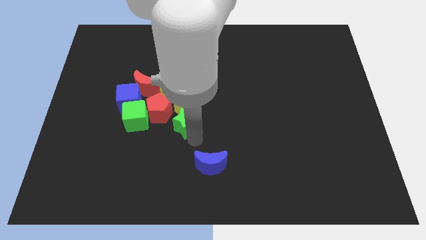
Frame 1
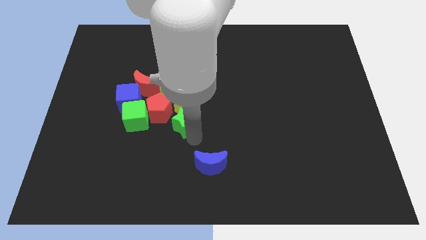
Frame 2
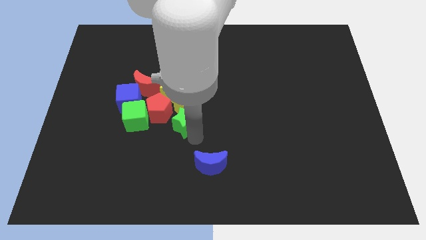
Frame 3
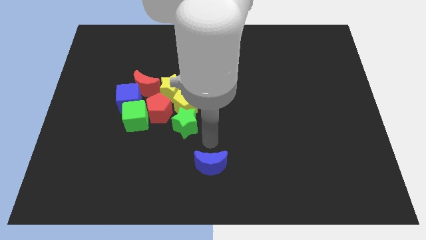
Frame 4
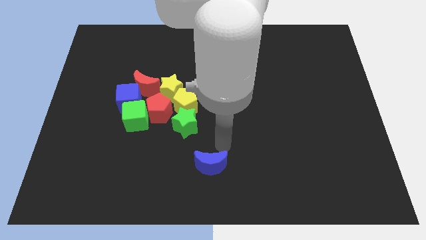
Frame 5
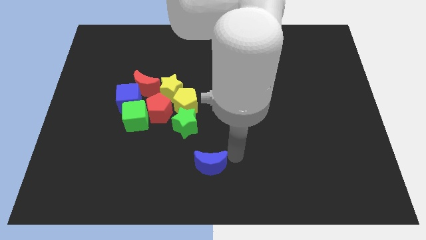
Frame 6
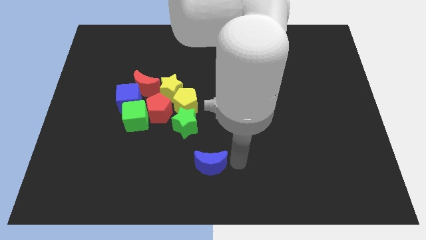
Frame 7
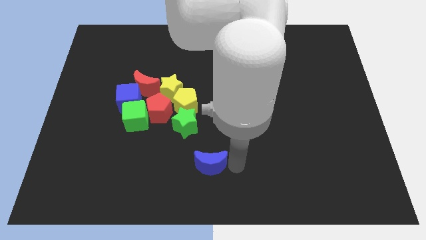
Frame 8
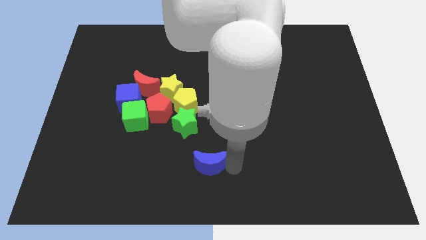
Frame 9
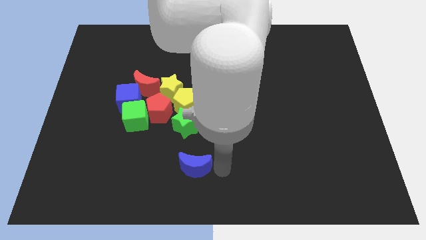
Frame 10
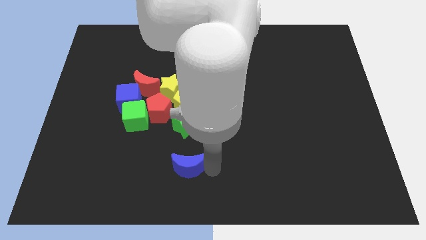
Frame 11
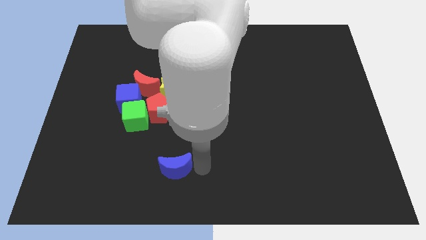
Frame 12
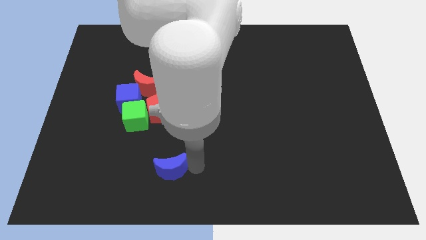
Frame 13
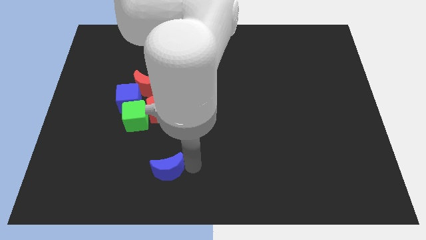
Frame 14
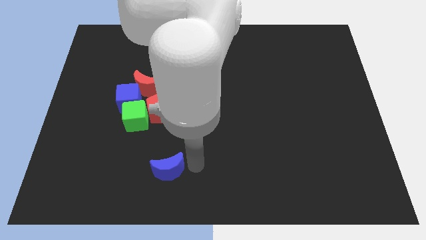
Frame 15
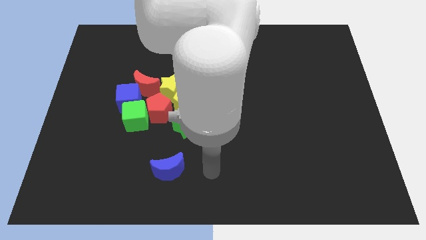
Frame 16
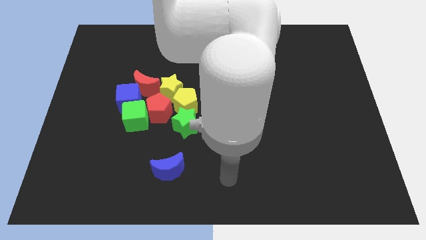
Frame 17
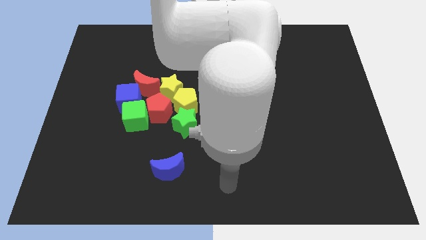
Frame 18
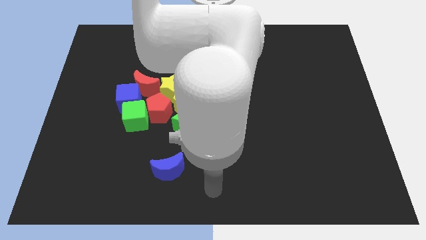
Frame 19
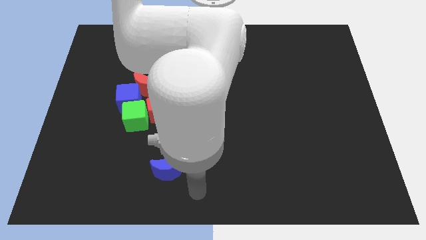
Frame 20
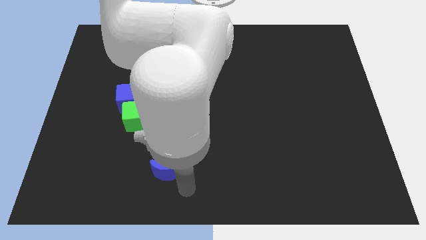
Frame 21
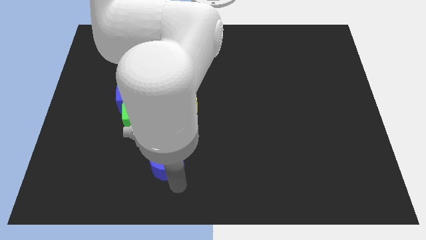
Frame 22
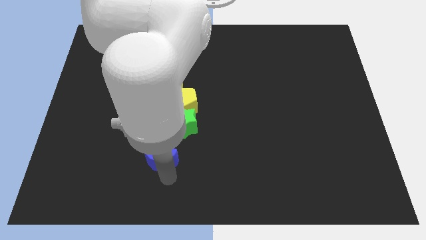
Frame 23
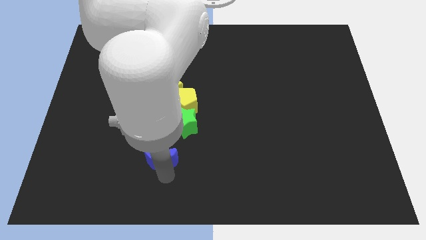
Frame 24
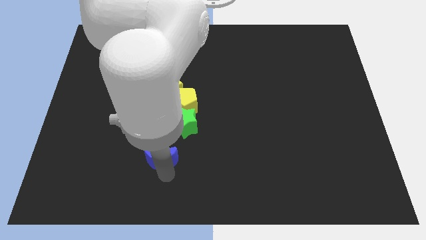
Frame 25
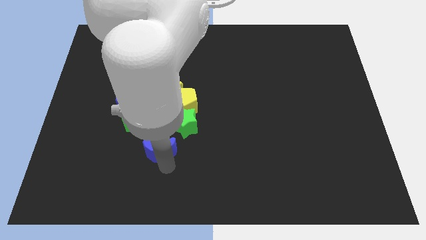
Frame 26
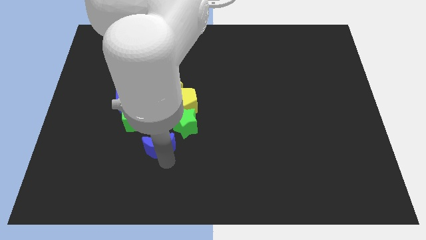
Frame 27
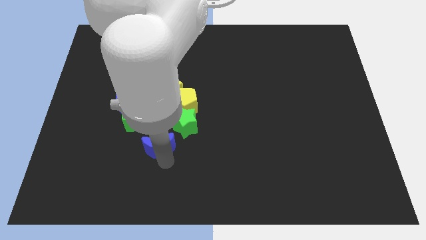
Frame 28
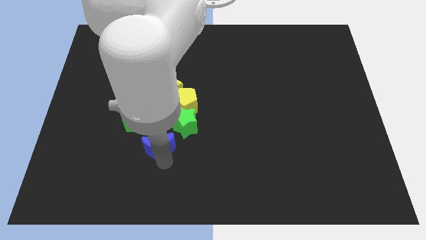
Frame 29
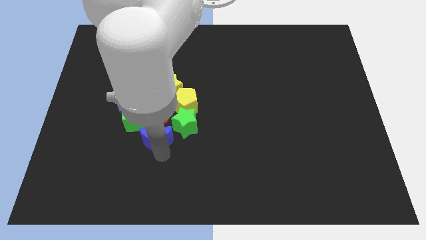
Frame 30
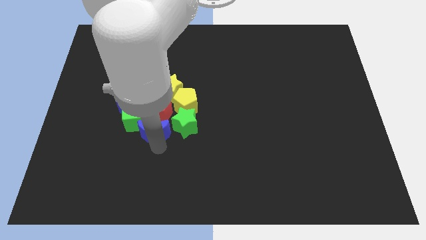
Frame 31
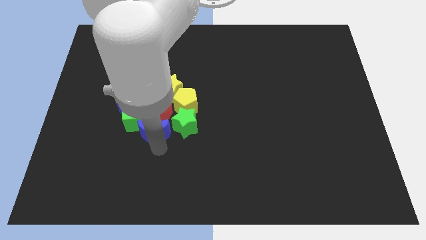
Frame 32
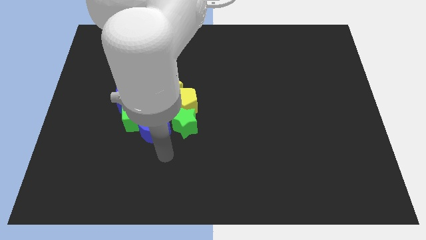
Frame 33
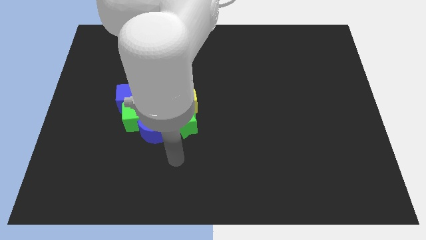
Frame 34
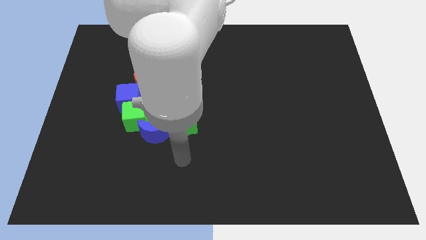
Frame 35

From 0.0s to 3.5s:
place the blue crescent below the red pentagon

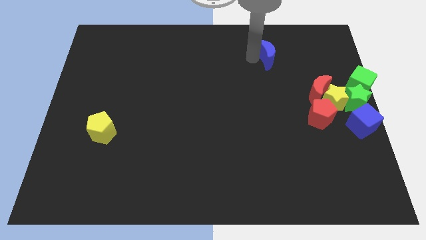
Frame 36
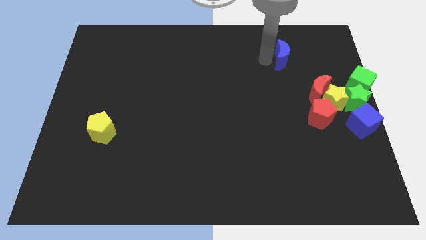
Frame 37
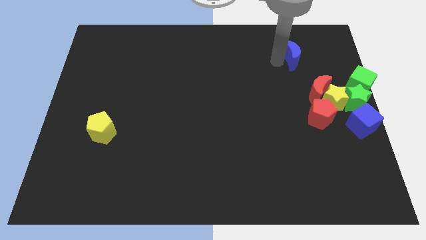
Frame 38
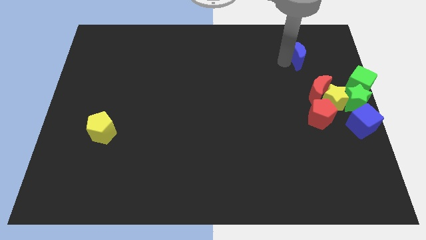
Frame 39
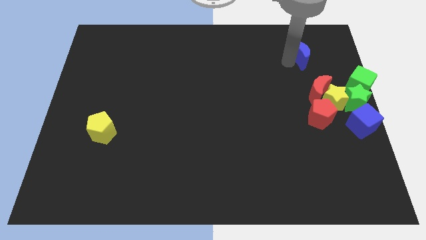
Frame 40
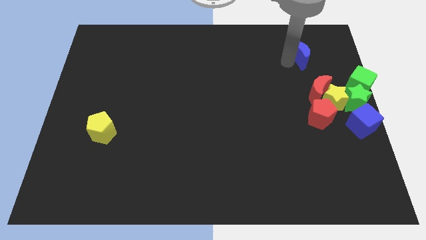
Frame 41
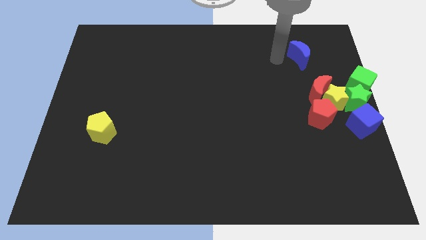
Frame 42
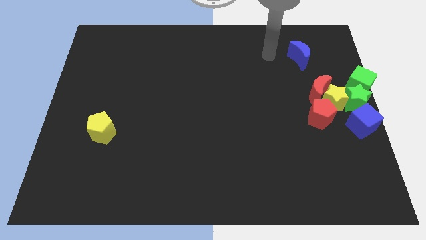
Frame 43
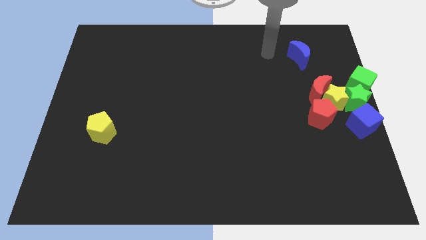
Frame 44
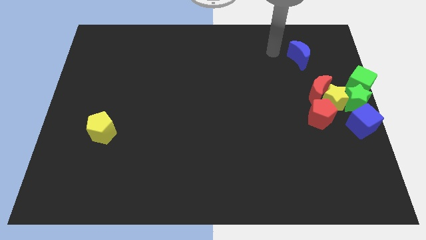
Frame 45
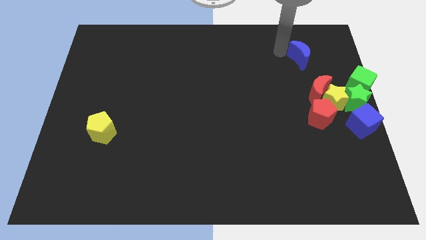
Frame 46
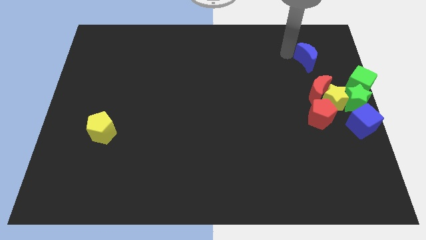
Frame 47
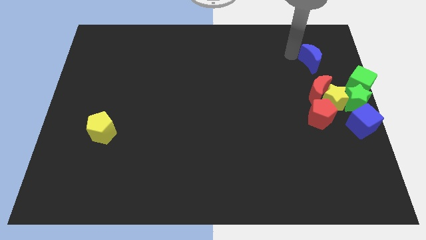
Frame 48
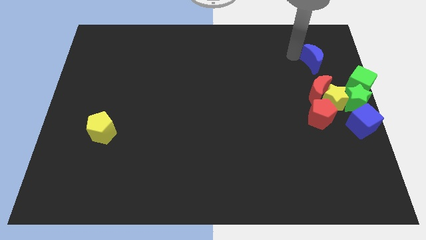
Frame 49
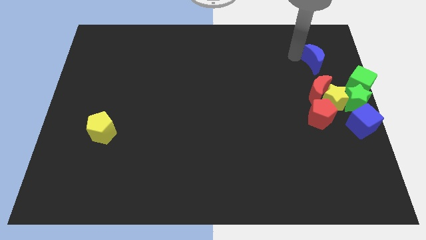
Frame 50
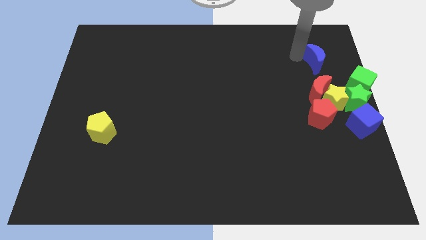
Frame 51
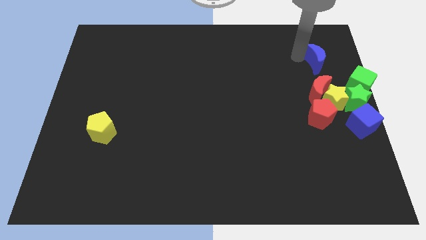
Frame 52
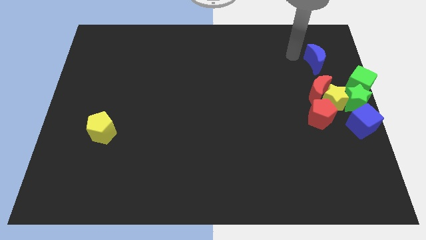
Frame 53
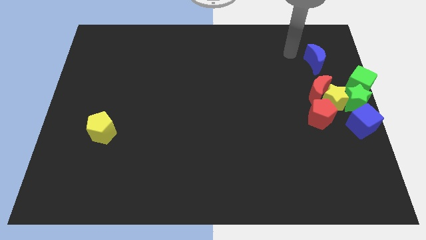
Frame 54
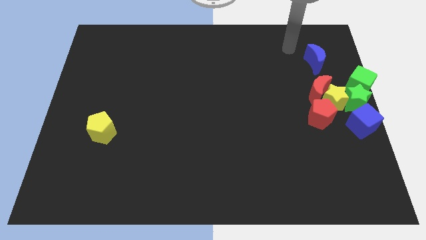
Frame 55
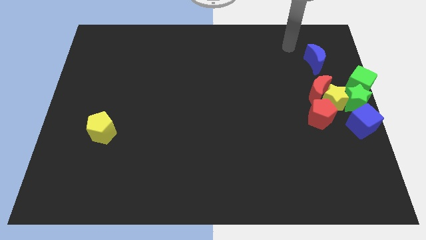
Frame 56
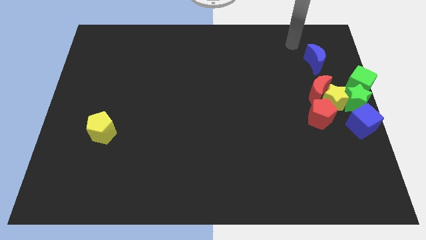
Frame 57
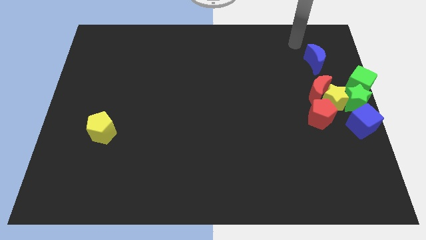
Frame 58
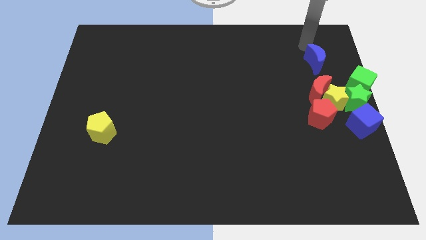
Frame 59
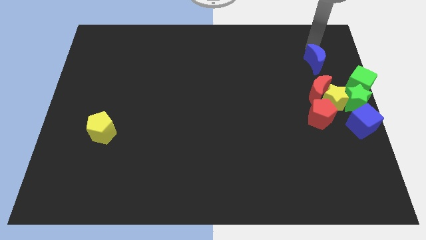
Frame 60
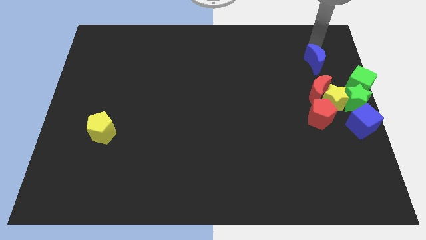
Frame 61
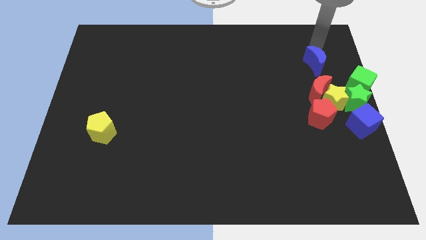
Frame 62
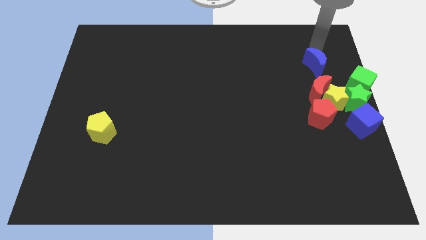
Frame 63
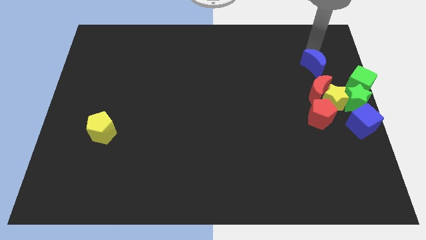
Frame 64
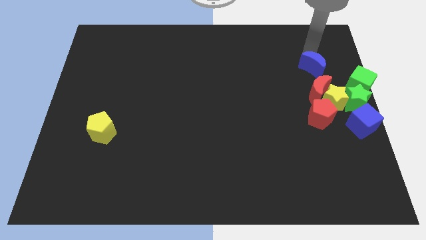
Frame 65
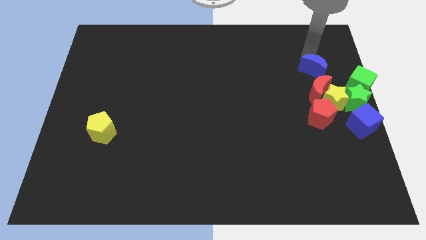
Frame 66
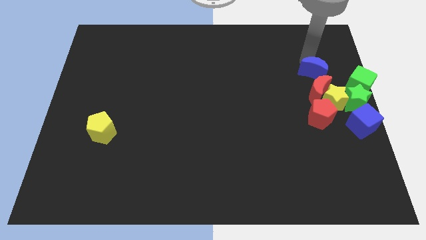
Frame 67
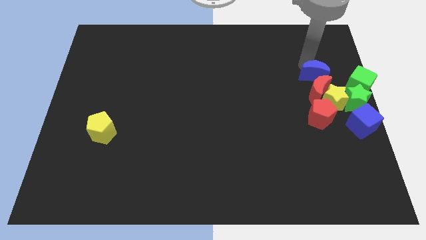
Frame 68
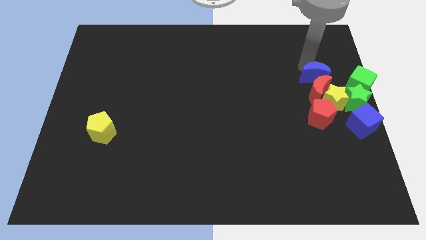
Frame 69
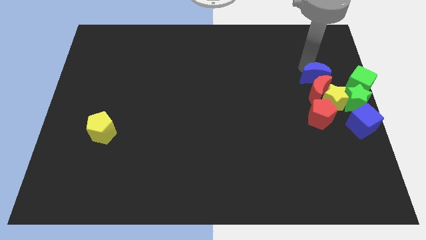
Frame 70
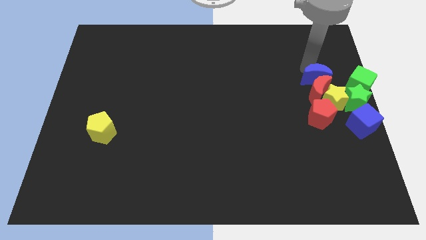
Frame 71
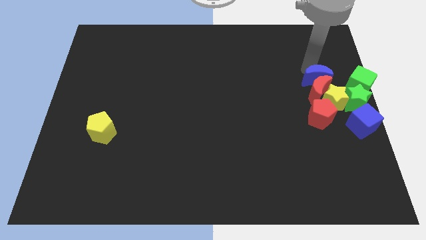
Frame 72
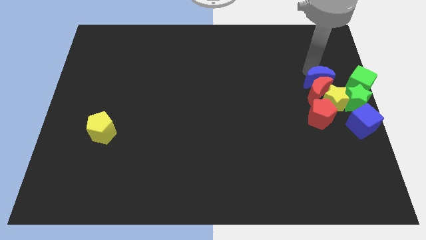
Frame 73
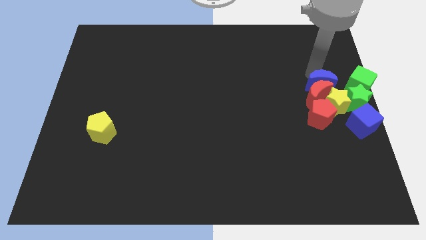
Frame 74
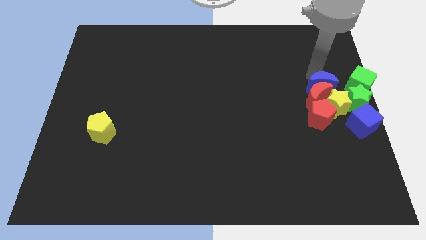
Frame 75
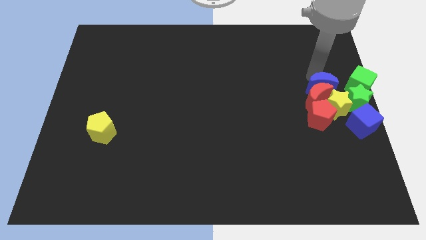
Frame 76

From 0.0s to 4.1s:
push the blue moon into the red moon

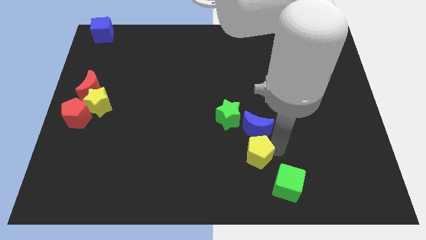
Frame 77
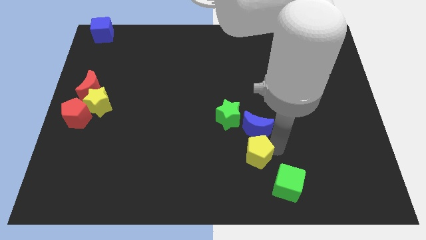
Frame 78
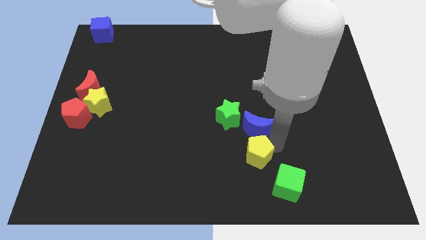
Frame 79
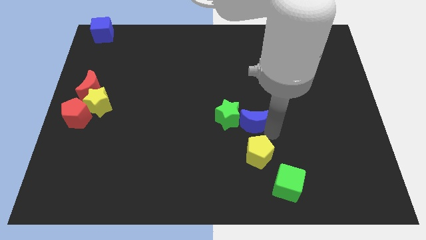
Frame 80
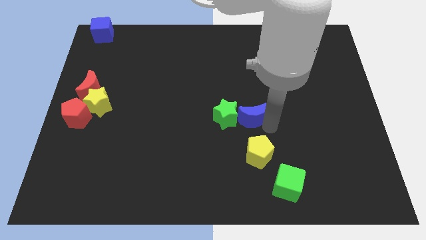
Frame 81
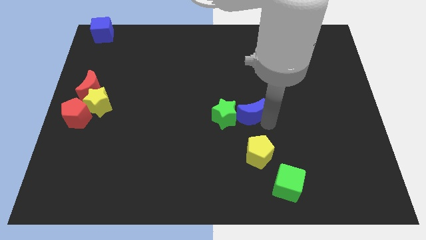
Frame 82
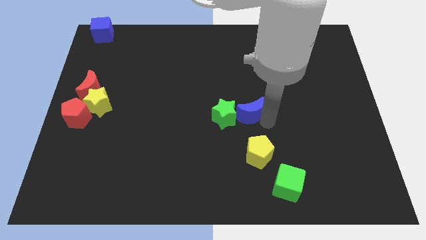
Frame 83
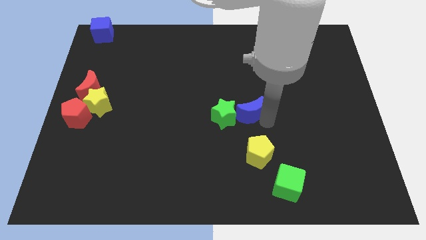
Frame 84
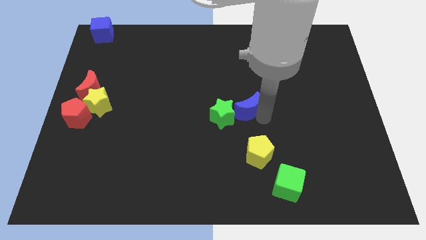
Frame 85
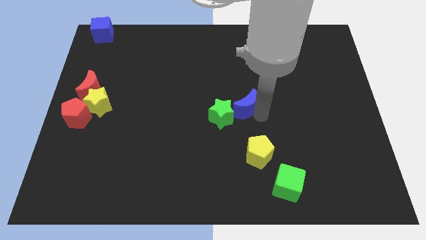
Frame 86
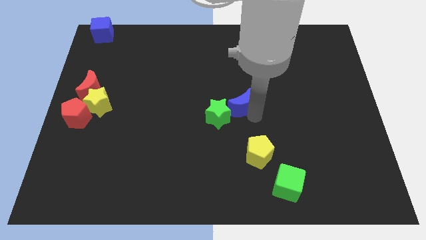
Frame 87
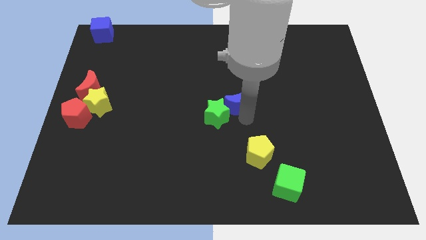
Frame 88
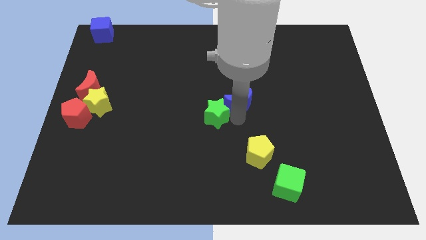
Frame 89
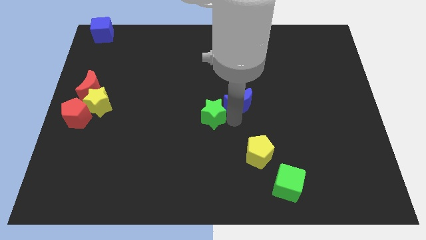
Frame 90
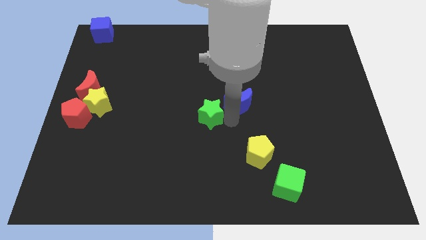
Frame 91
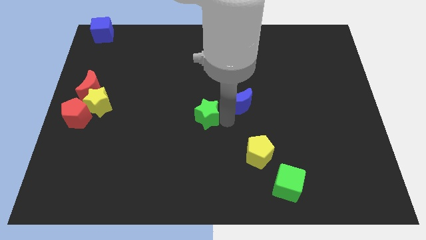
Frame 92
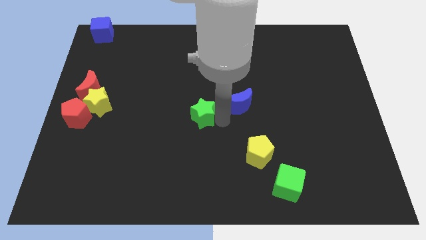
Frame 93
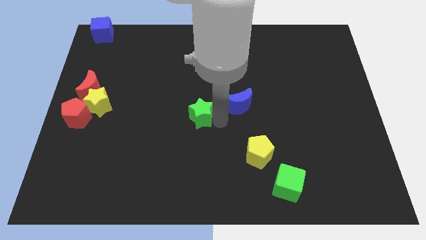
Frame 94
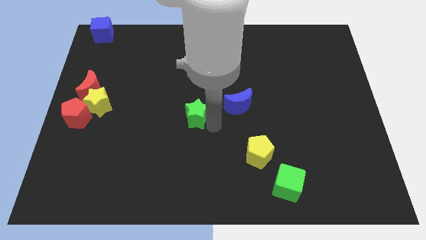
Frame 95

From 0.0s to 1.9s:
separate the blue crescent yellow pentagon and the green star
